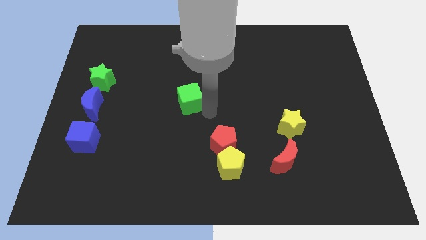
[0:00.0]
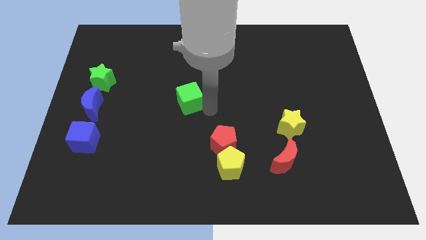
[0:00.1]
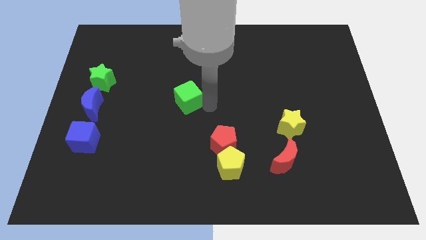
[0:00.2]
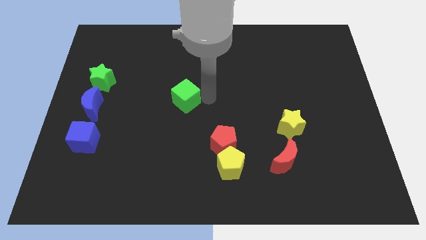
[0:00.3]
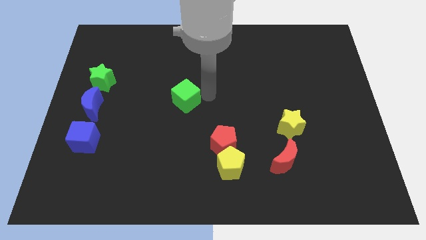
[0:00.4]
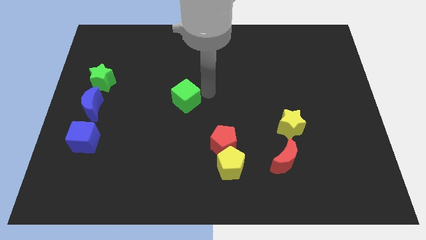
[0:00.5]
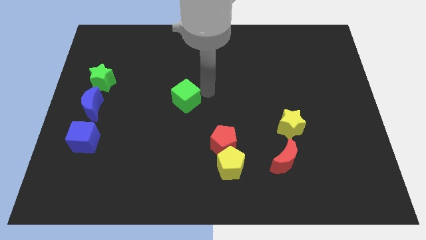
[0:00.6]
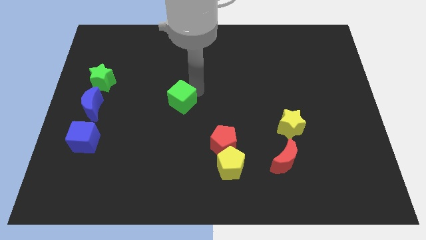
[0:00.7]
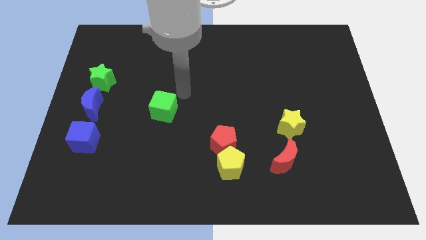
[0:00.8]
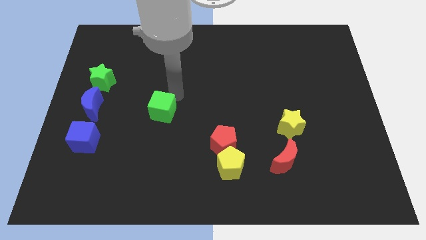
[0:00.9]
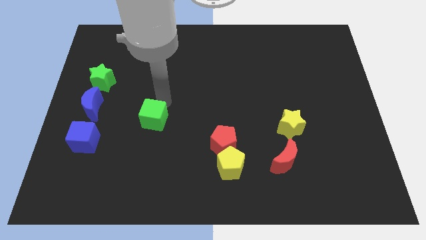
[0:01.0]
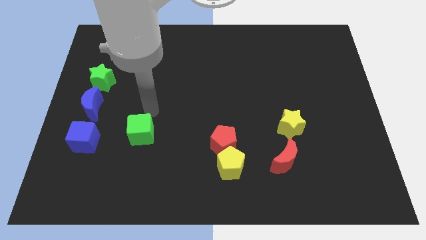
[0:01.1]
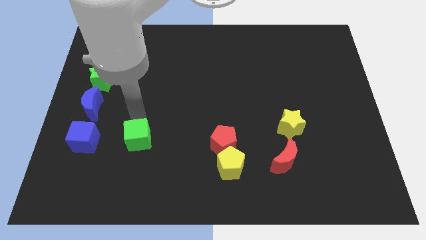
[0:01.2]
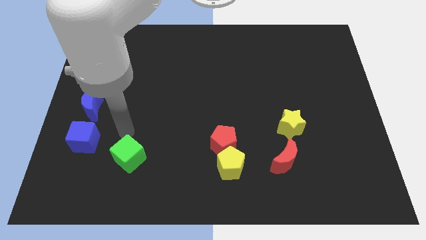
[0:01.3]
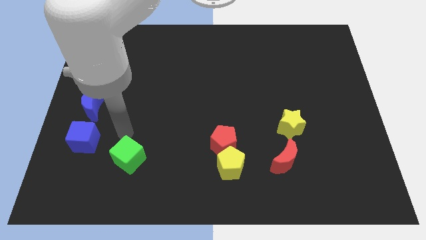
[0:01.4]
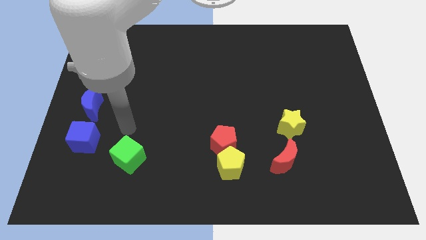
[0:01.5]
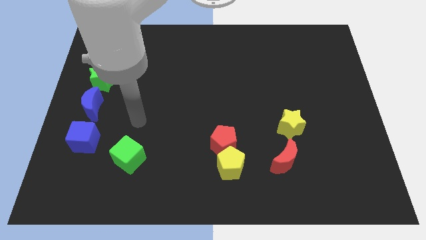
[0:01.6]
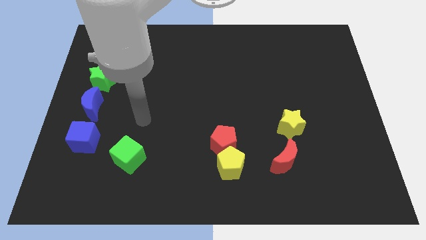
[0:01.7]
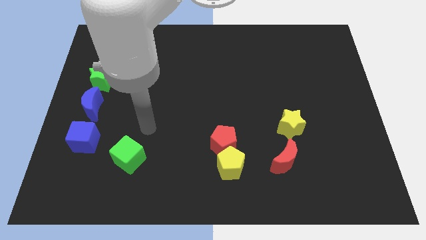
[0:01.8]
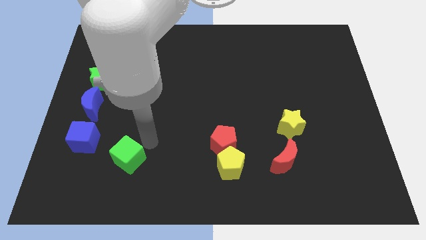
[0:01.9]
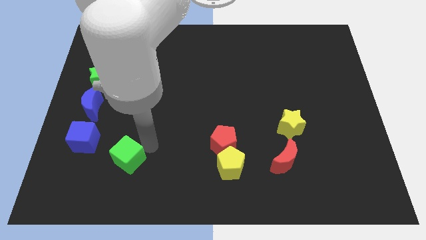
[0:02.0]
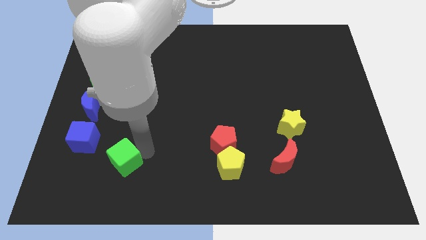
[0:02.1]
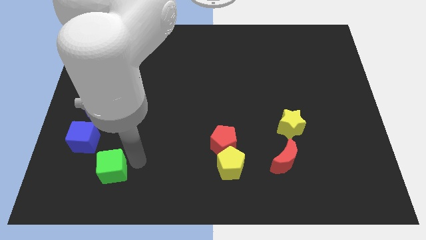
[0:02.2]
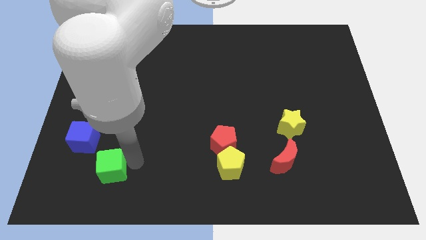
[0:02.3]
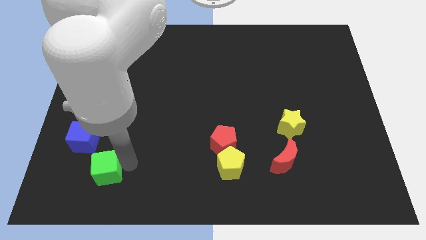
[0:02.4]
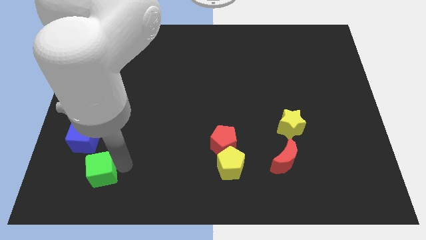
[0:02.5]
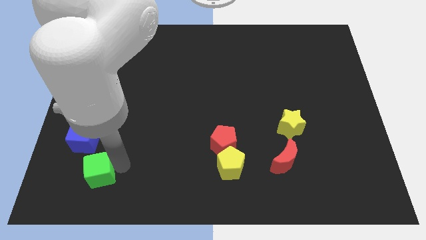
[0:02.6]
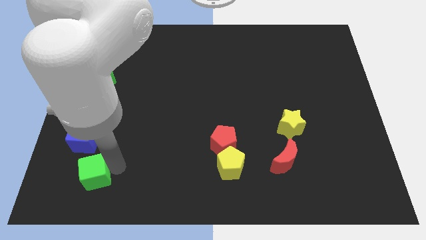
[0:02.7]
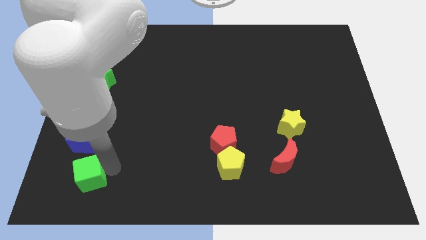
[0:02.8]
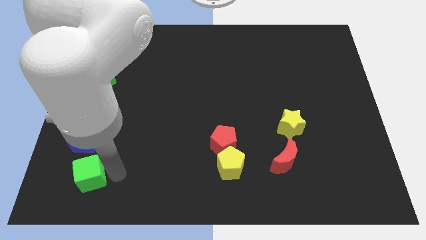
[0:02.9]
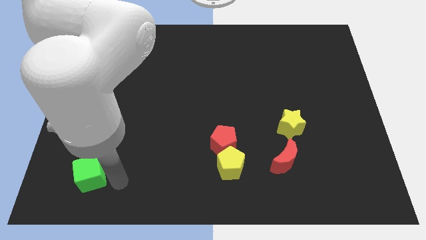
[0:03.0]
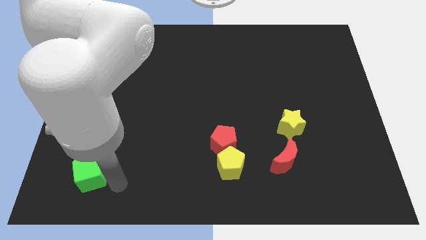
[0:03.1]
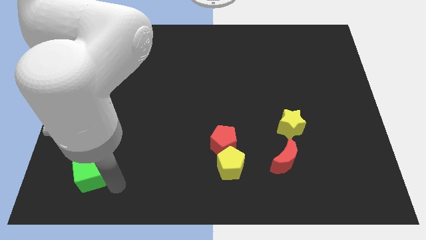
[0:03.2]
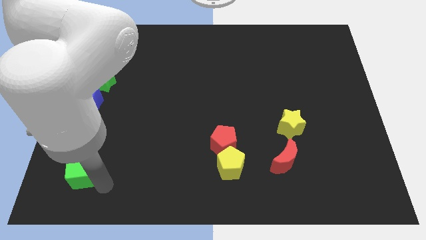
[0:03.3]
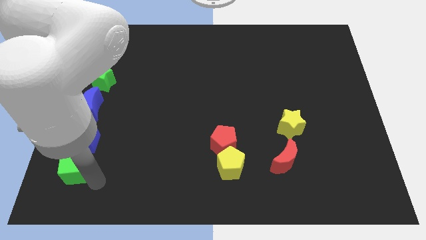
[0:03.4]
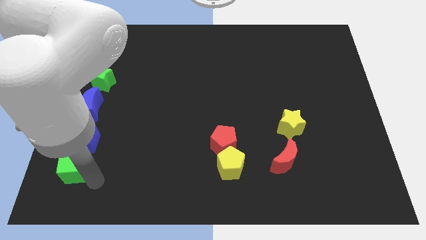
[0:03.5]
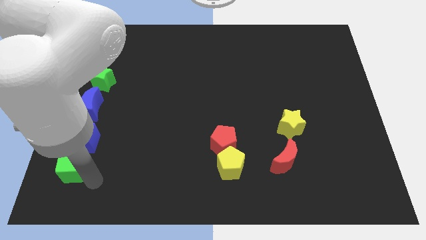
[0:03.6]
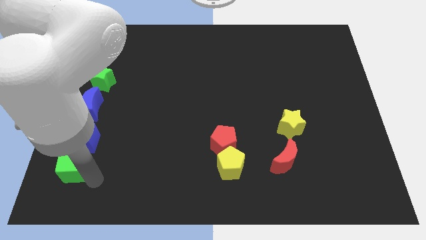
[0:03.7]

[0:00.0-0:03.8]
place the green cube vertically below the blue cube

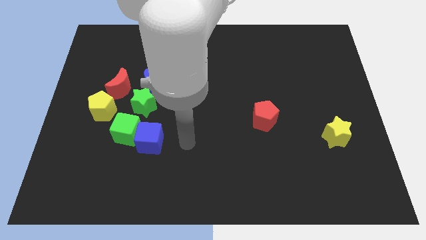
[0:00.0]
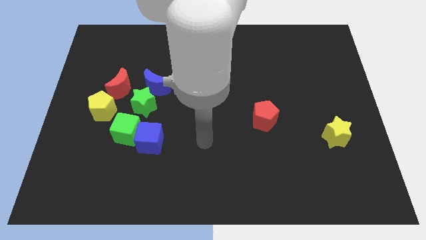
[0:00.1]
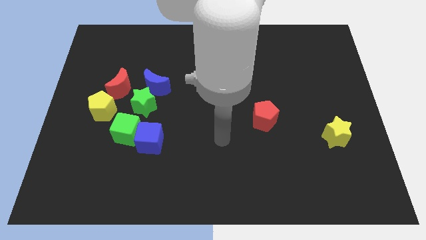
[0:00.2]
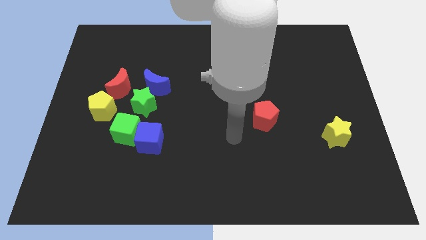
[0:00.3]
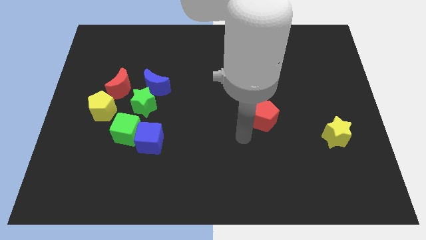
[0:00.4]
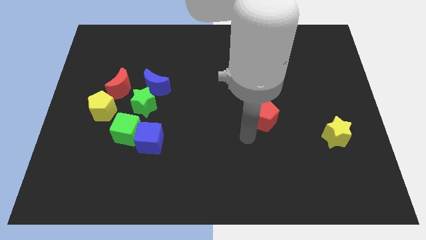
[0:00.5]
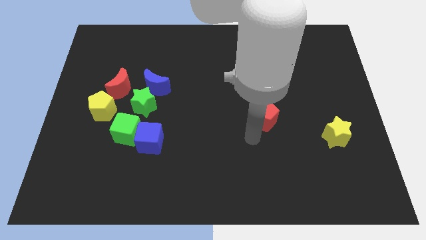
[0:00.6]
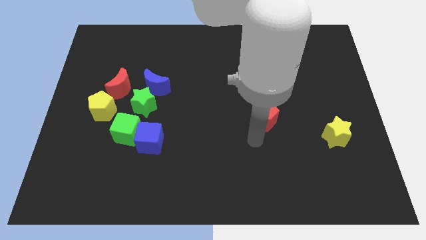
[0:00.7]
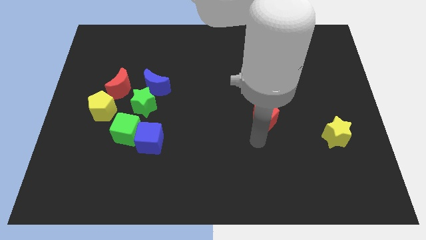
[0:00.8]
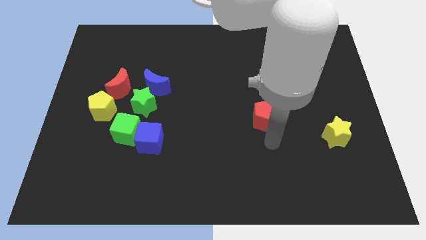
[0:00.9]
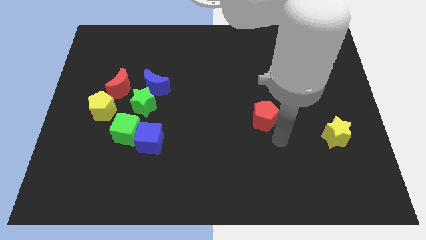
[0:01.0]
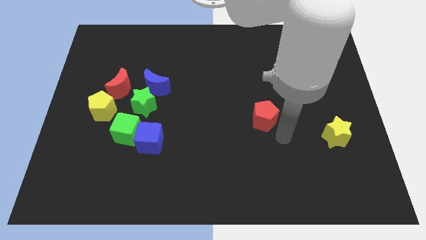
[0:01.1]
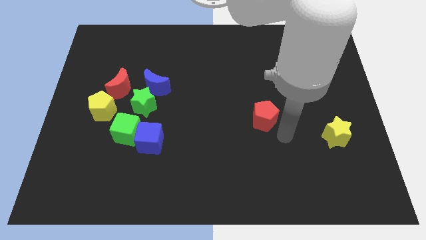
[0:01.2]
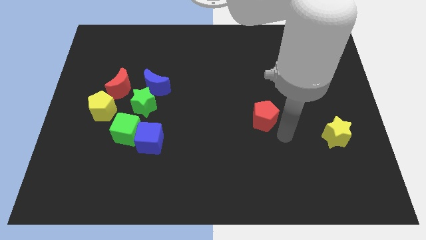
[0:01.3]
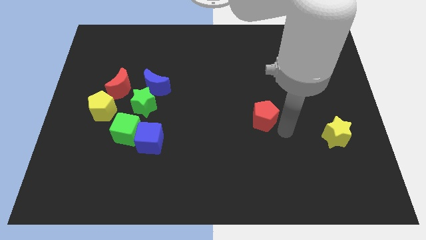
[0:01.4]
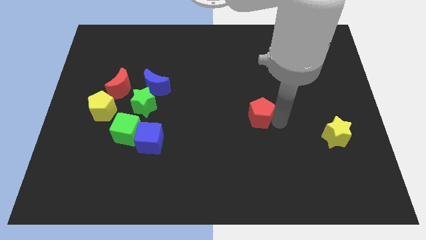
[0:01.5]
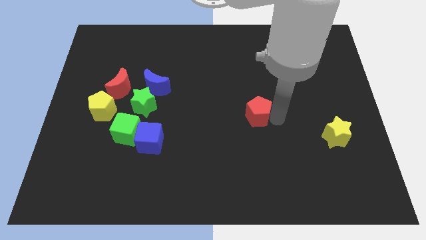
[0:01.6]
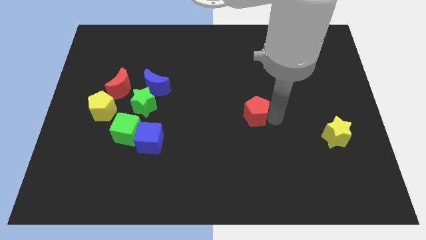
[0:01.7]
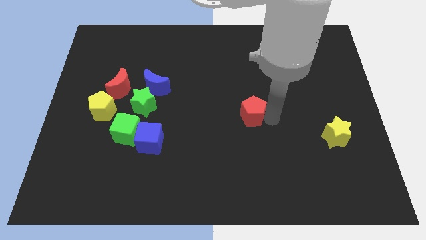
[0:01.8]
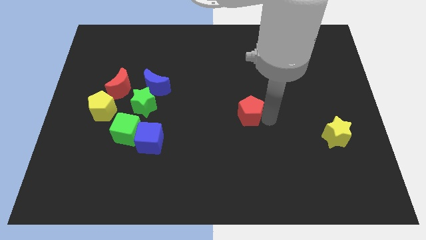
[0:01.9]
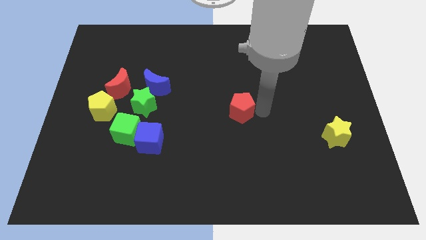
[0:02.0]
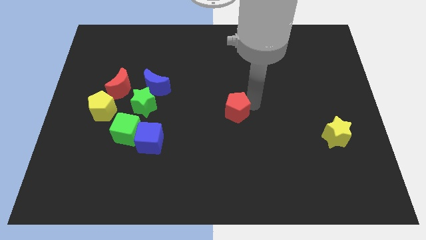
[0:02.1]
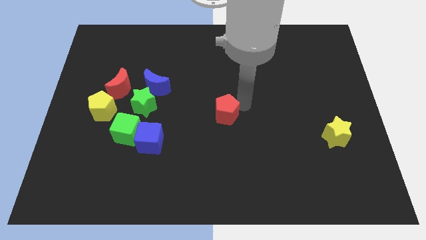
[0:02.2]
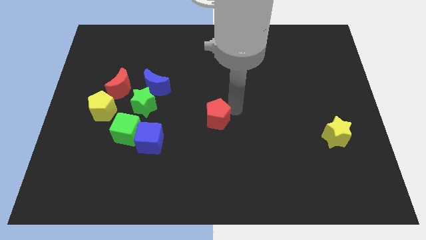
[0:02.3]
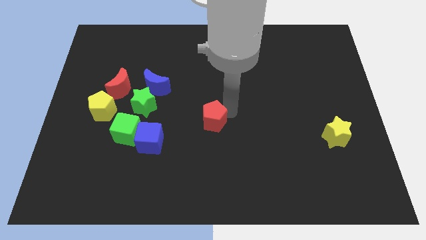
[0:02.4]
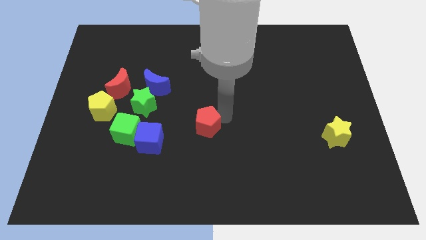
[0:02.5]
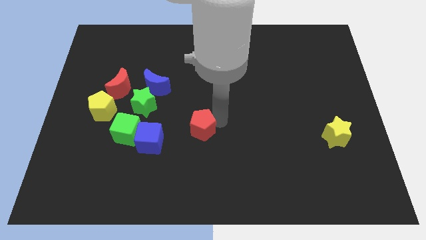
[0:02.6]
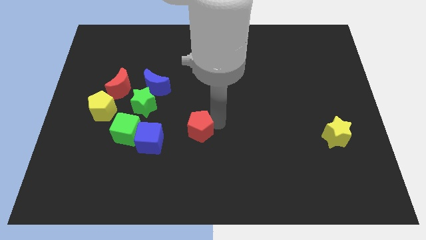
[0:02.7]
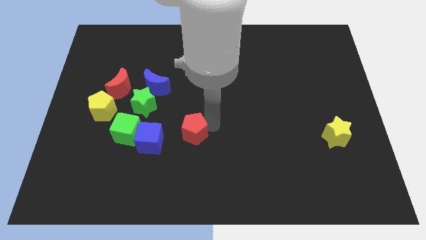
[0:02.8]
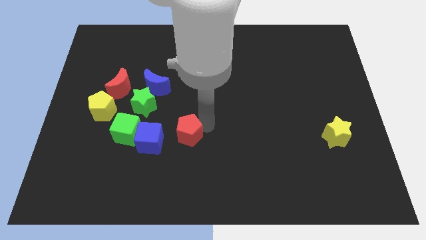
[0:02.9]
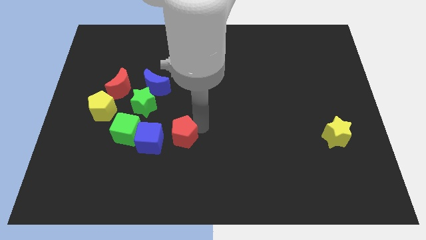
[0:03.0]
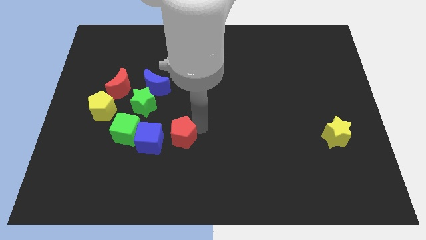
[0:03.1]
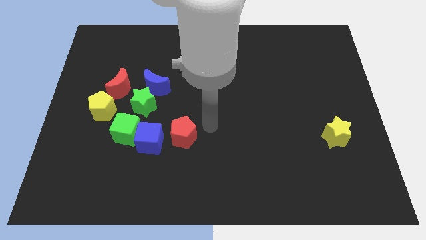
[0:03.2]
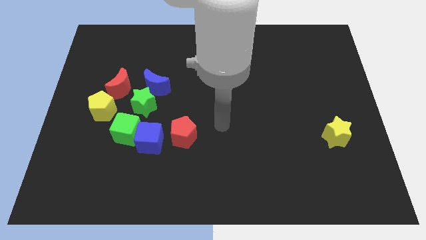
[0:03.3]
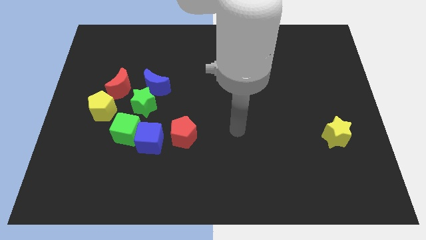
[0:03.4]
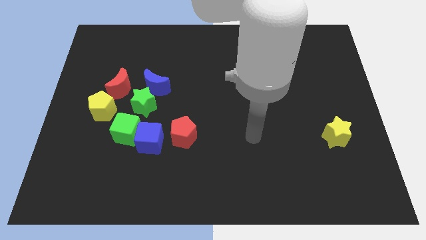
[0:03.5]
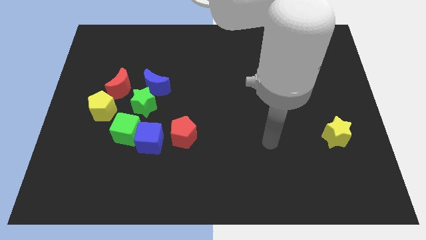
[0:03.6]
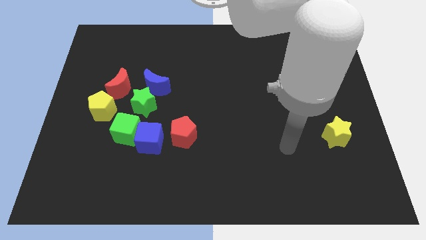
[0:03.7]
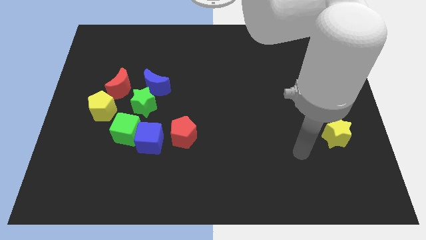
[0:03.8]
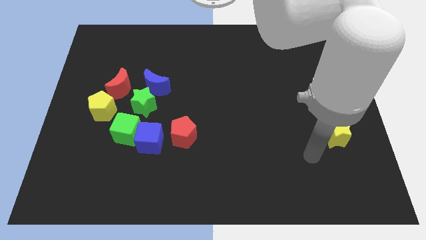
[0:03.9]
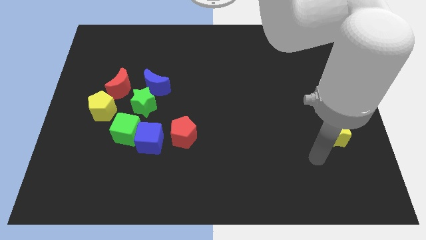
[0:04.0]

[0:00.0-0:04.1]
slide red pentagon to right of blue cube

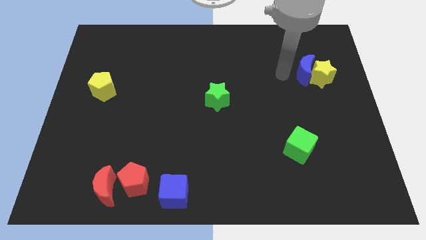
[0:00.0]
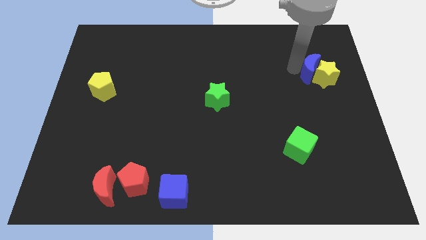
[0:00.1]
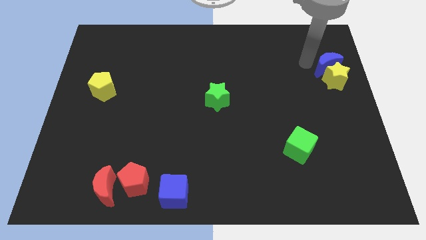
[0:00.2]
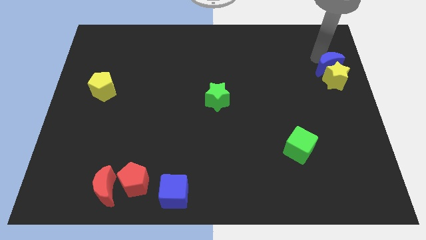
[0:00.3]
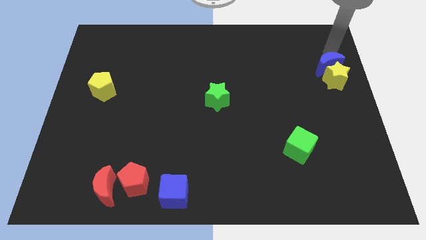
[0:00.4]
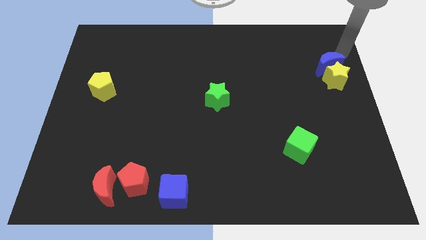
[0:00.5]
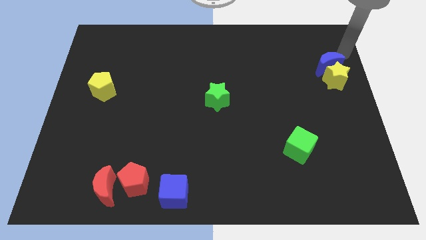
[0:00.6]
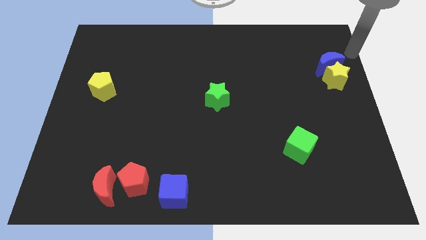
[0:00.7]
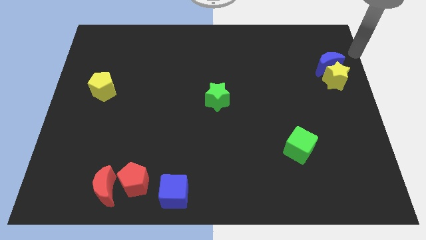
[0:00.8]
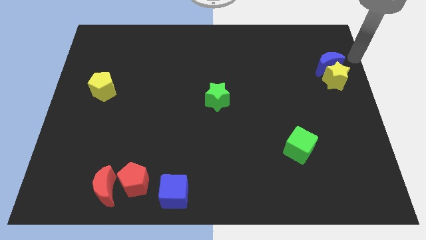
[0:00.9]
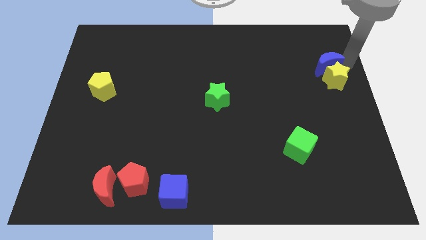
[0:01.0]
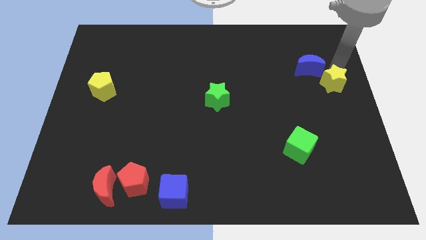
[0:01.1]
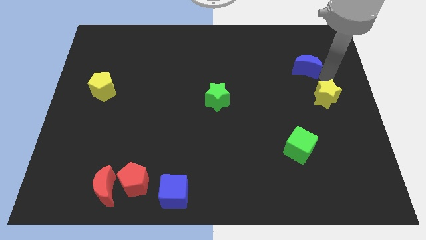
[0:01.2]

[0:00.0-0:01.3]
separate the yellow star and the blue crescent
